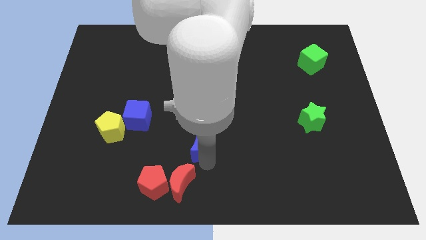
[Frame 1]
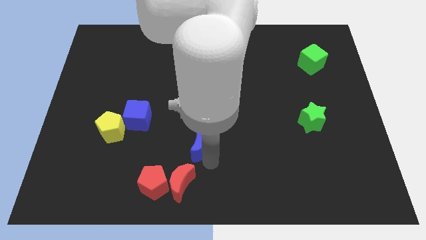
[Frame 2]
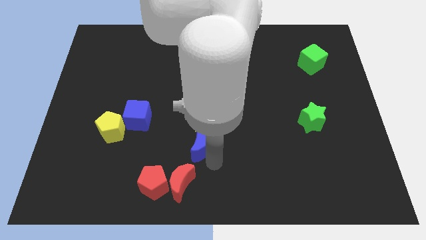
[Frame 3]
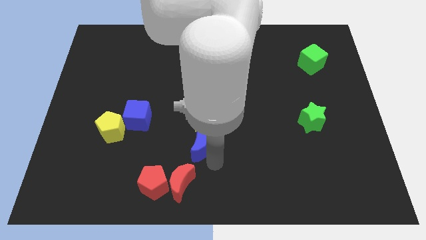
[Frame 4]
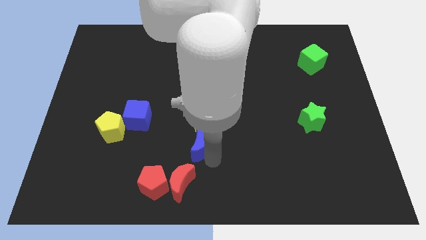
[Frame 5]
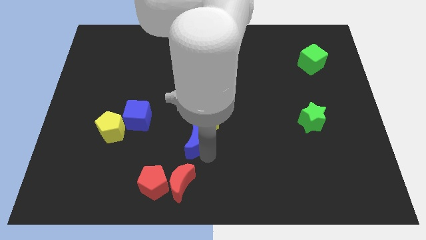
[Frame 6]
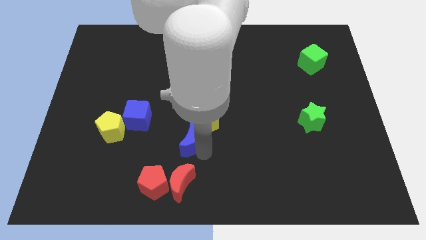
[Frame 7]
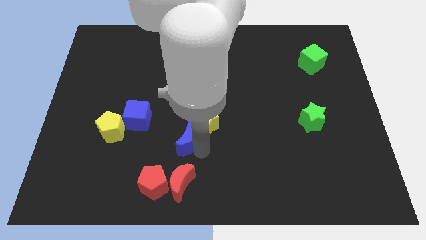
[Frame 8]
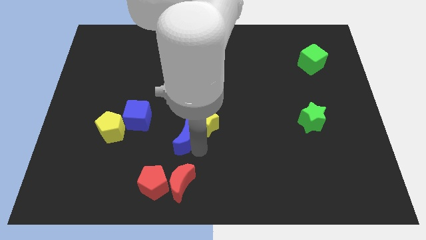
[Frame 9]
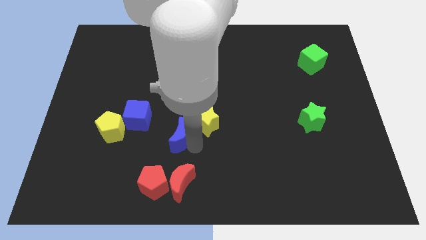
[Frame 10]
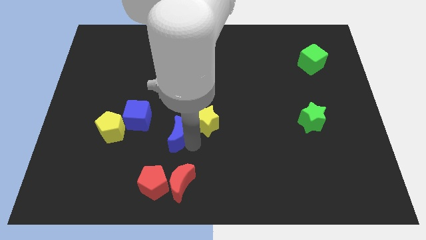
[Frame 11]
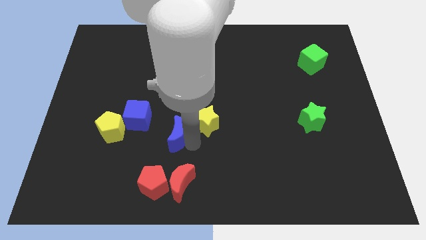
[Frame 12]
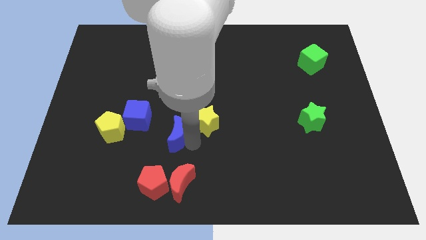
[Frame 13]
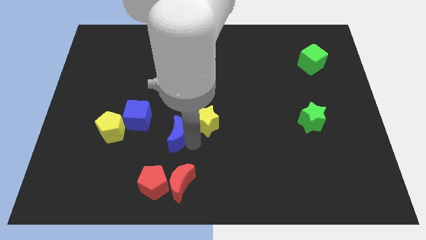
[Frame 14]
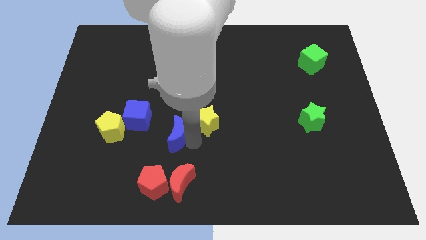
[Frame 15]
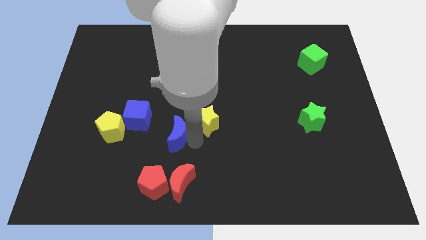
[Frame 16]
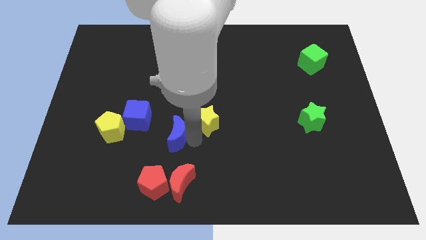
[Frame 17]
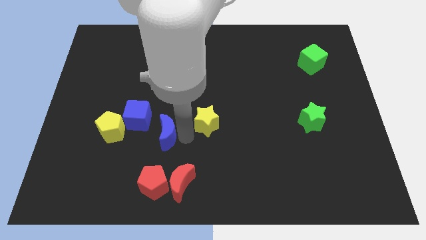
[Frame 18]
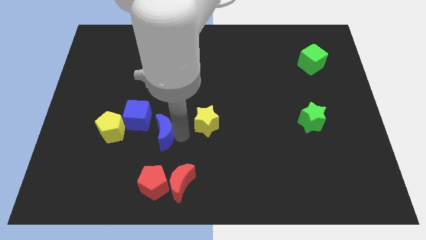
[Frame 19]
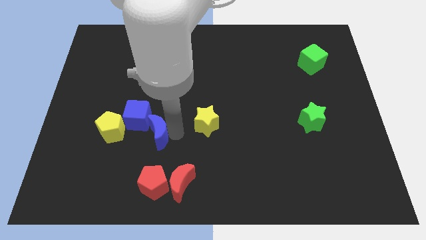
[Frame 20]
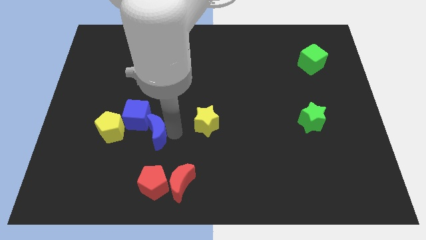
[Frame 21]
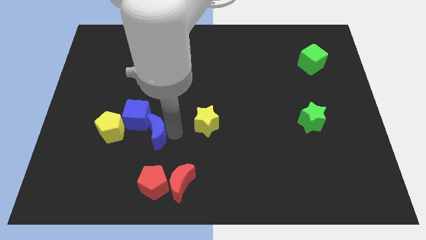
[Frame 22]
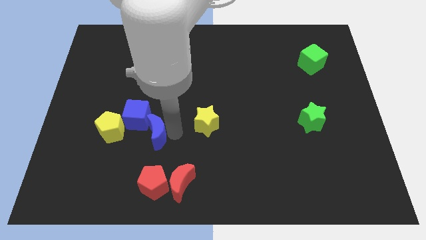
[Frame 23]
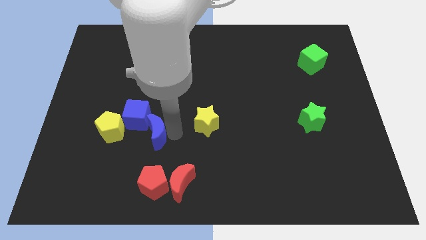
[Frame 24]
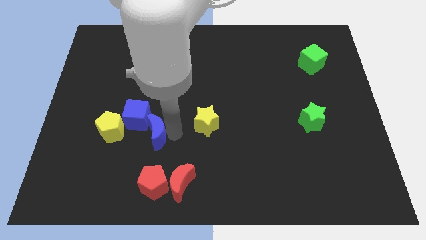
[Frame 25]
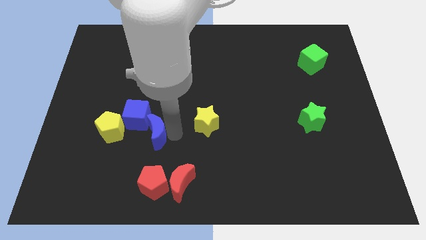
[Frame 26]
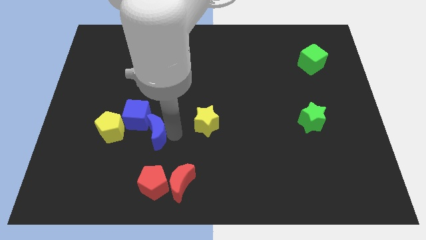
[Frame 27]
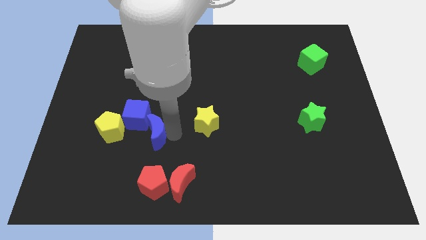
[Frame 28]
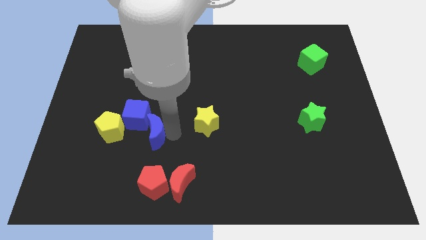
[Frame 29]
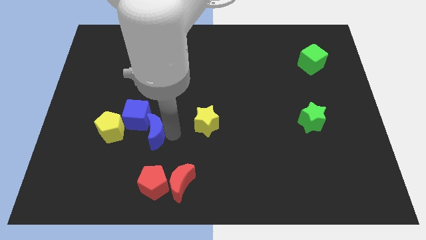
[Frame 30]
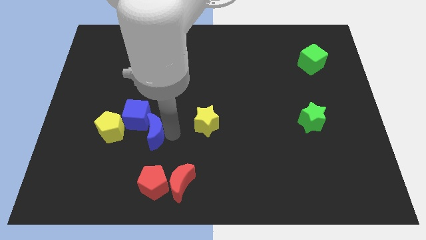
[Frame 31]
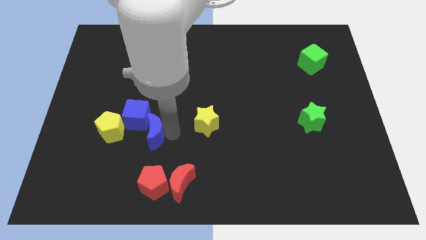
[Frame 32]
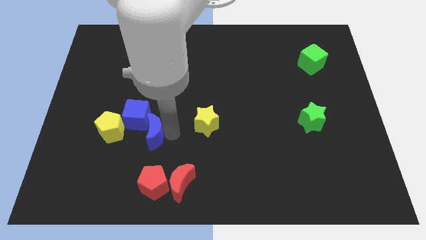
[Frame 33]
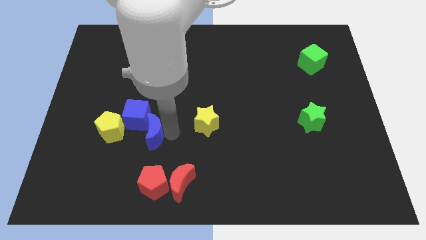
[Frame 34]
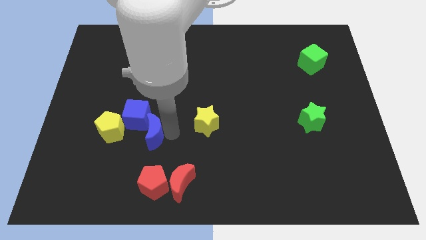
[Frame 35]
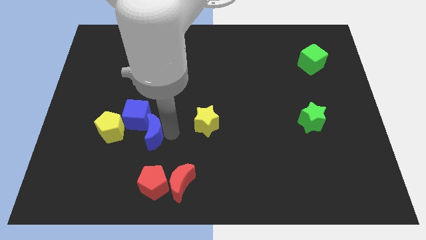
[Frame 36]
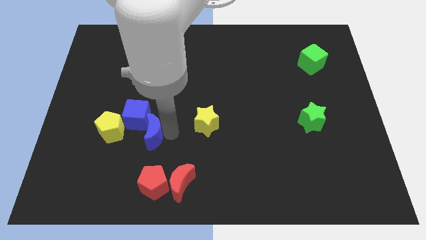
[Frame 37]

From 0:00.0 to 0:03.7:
push the blue crescent into the blue cube

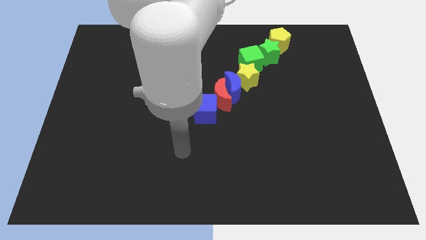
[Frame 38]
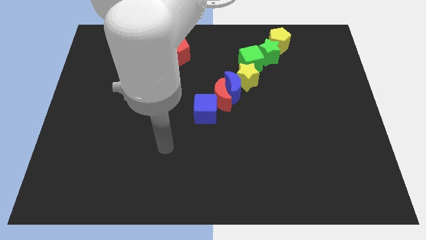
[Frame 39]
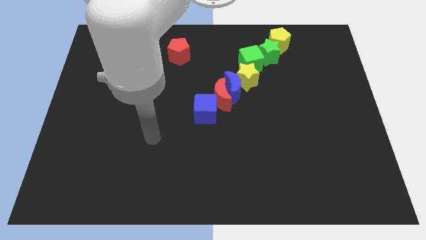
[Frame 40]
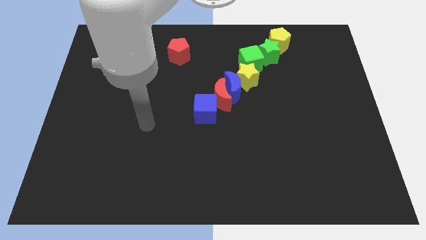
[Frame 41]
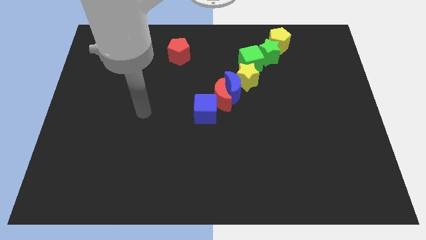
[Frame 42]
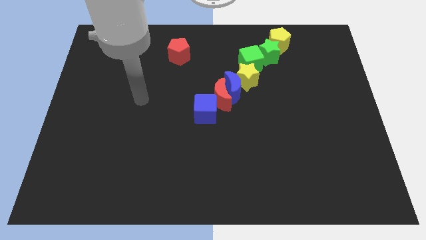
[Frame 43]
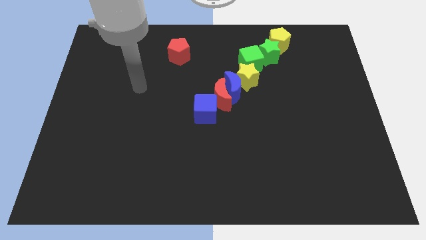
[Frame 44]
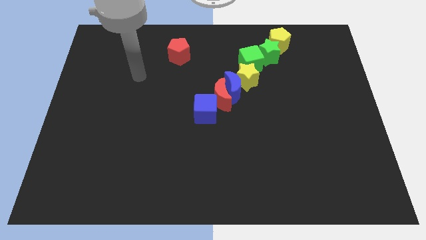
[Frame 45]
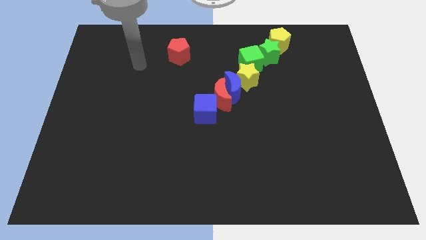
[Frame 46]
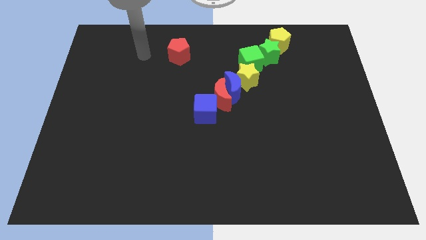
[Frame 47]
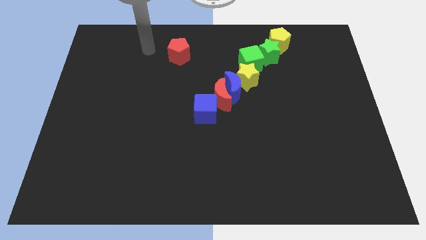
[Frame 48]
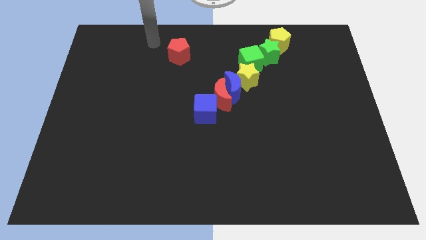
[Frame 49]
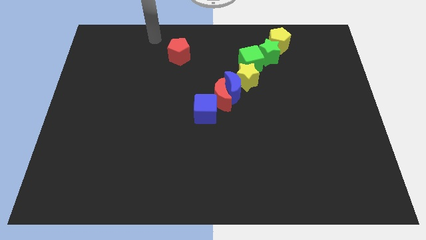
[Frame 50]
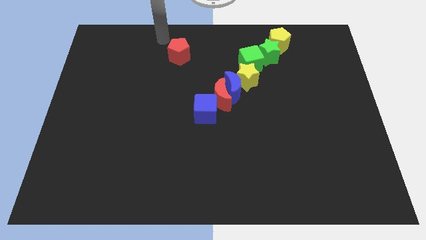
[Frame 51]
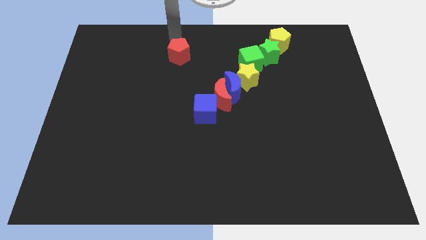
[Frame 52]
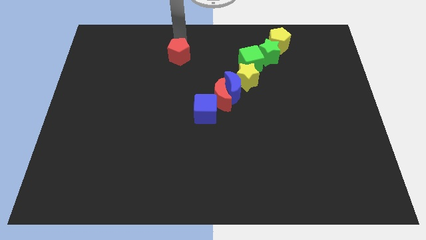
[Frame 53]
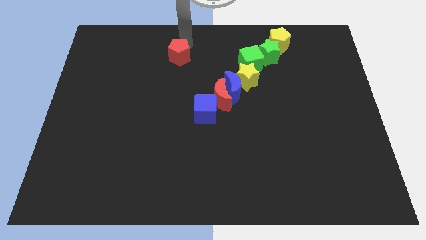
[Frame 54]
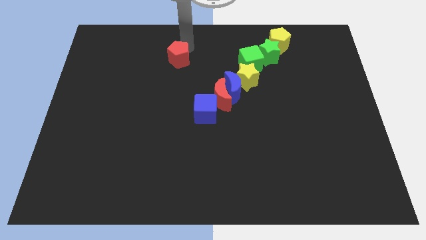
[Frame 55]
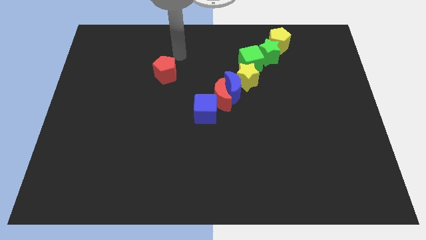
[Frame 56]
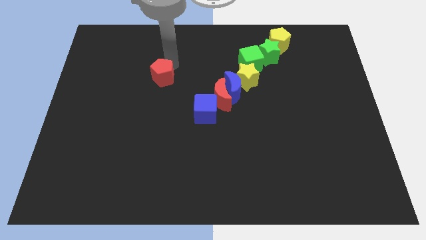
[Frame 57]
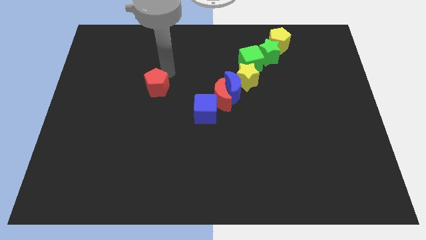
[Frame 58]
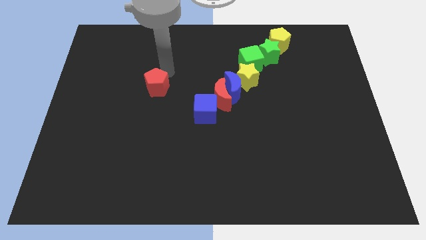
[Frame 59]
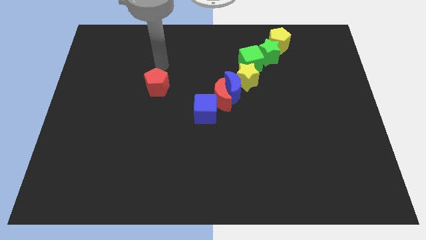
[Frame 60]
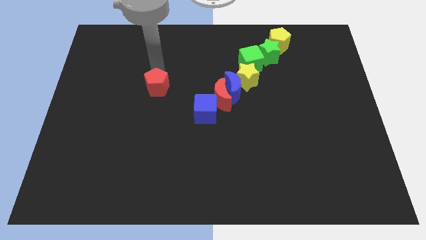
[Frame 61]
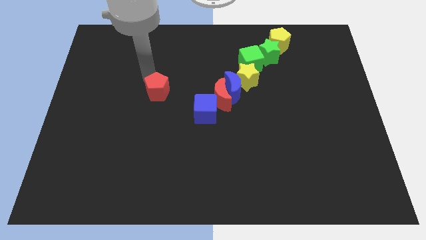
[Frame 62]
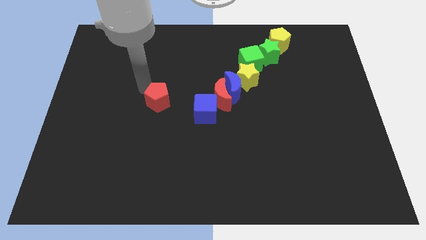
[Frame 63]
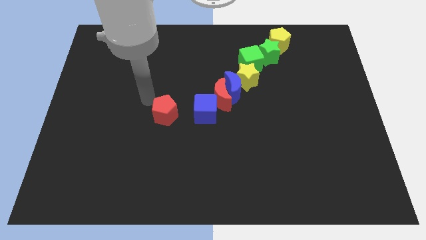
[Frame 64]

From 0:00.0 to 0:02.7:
move the red pentagon parallel left to the blue cube

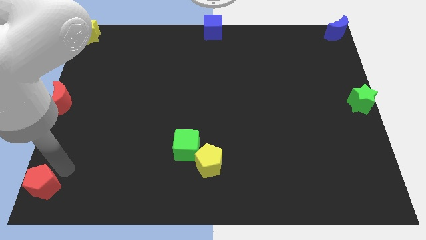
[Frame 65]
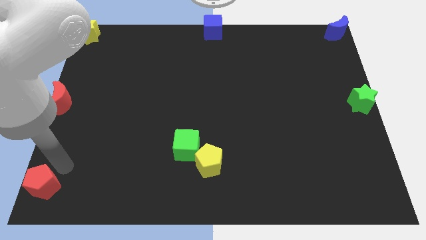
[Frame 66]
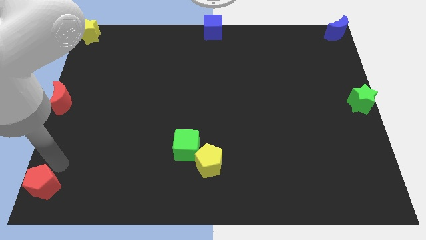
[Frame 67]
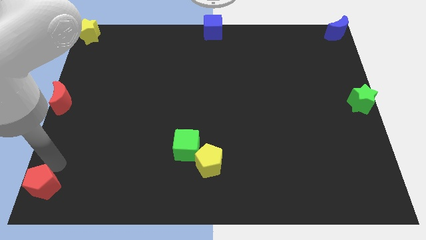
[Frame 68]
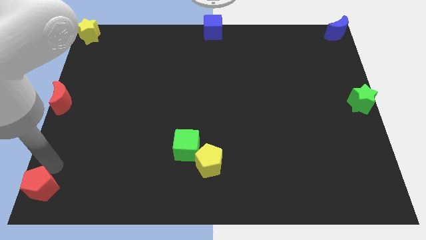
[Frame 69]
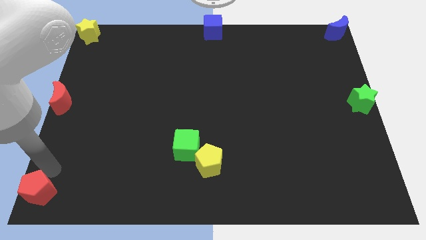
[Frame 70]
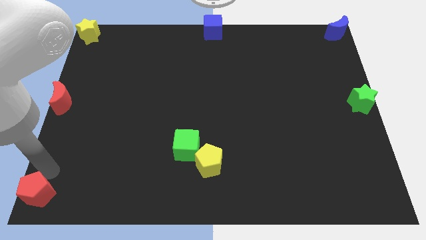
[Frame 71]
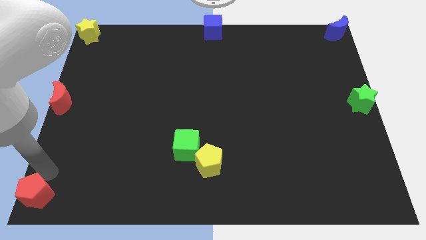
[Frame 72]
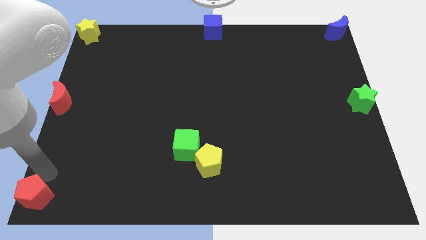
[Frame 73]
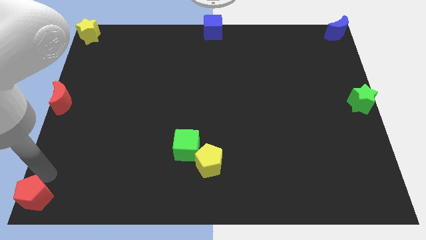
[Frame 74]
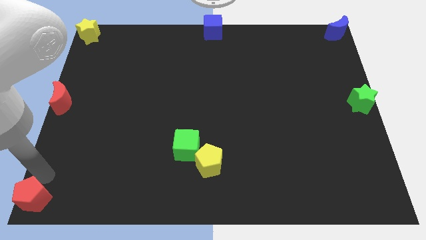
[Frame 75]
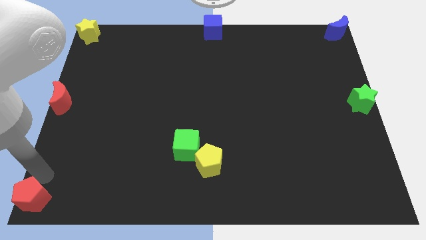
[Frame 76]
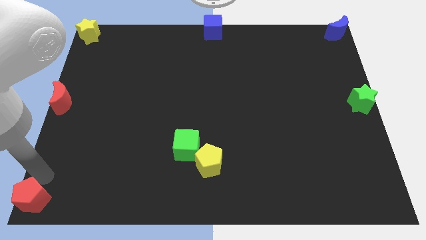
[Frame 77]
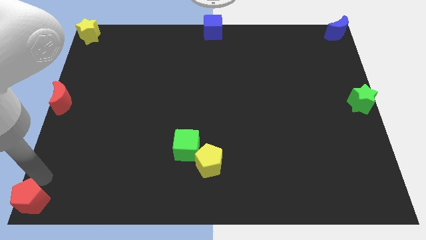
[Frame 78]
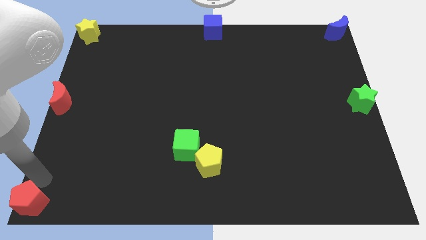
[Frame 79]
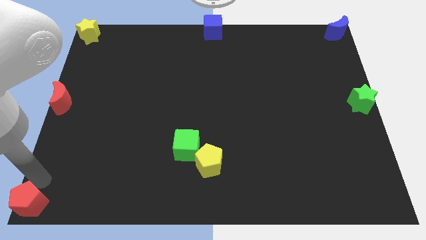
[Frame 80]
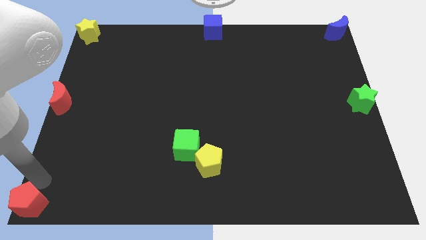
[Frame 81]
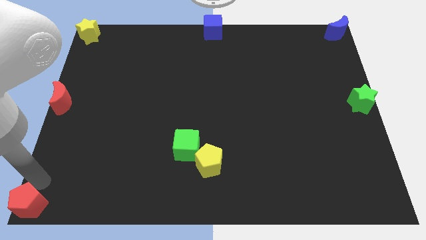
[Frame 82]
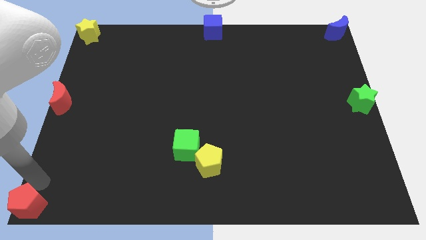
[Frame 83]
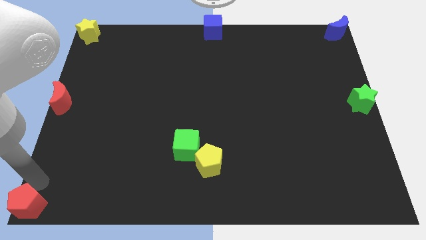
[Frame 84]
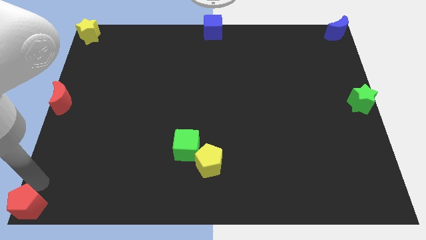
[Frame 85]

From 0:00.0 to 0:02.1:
push the red pentagon towards the bottom left side corner

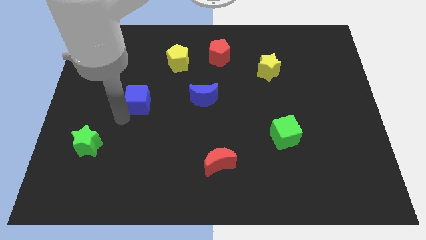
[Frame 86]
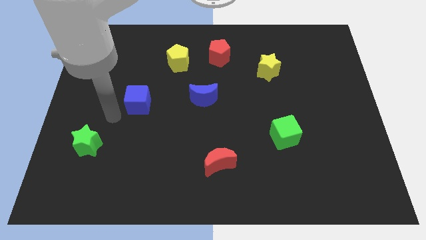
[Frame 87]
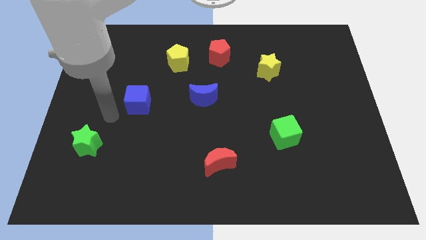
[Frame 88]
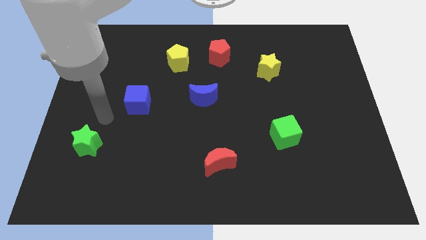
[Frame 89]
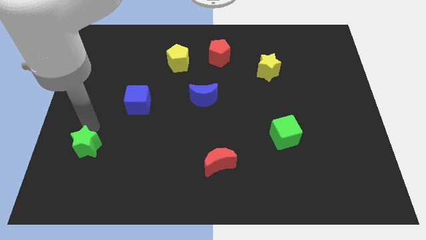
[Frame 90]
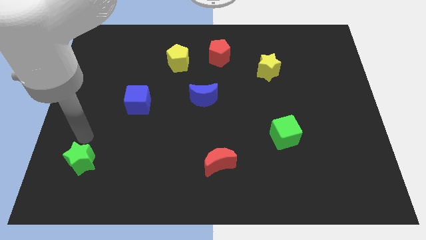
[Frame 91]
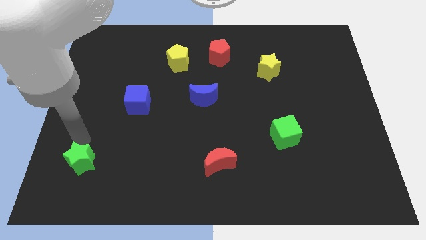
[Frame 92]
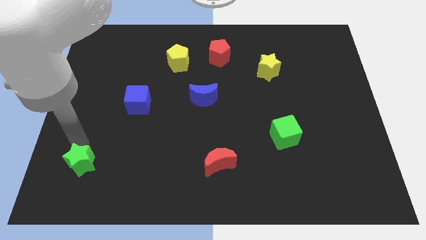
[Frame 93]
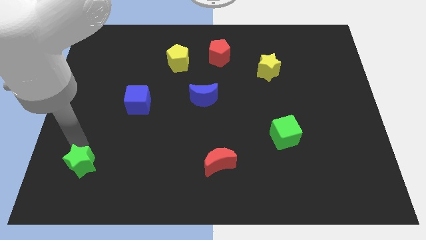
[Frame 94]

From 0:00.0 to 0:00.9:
slide the green star down slightly
